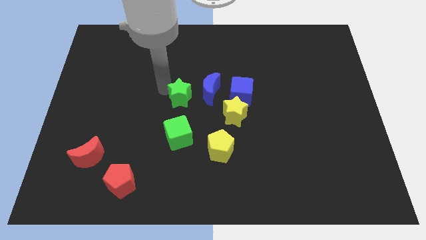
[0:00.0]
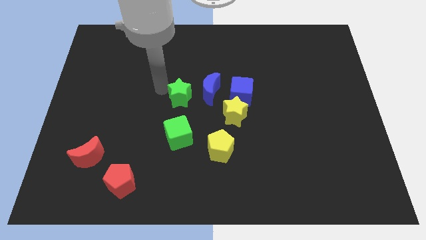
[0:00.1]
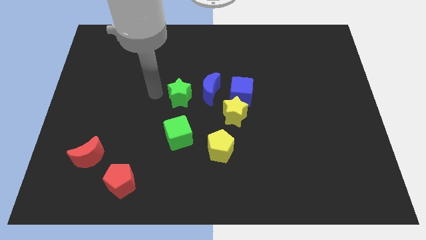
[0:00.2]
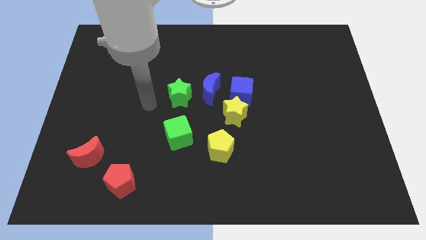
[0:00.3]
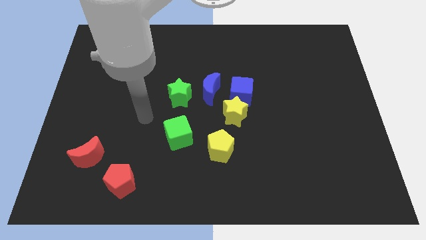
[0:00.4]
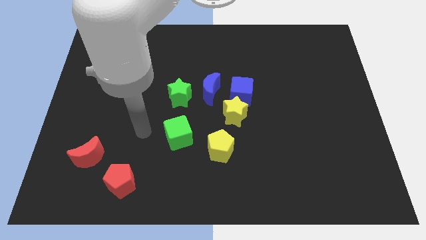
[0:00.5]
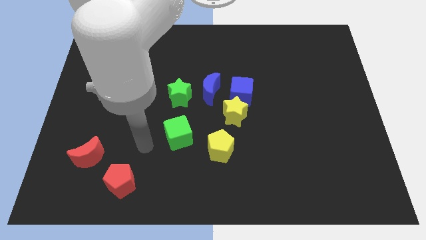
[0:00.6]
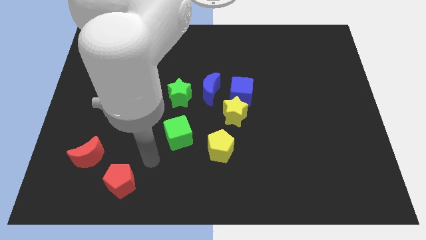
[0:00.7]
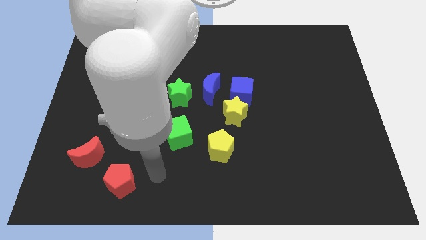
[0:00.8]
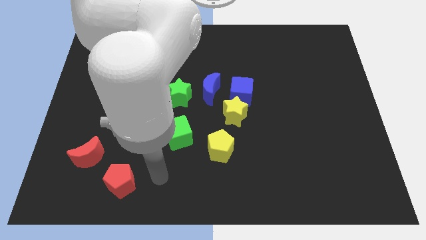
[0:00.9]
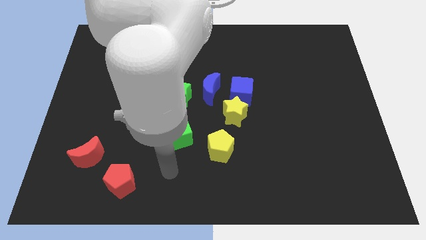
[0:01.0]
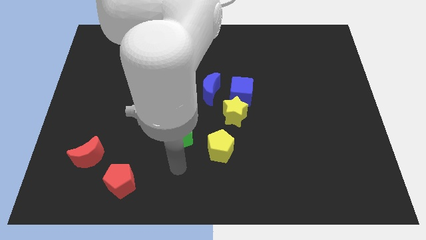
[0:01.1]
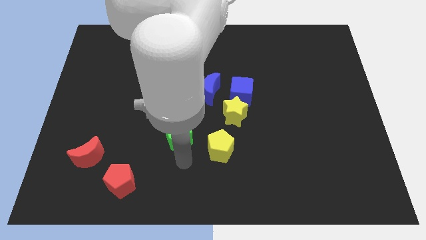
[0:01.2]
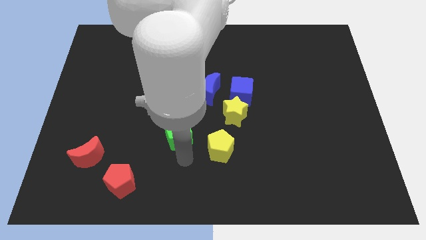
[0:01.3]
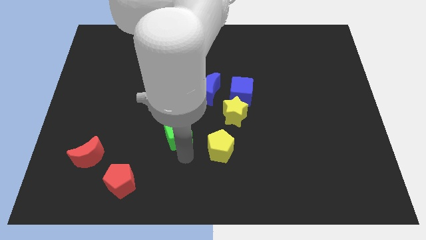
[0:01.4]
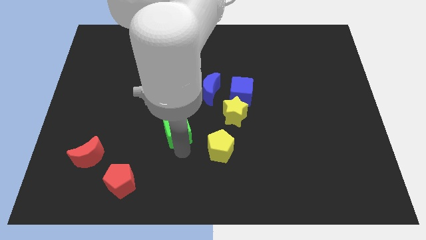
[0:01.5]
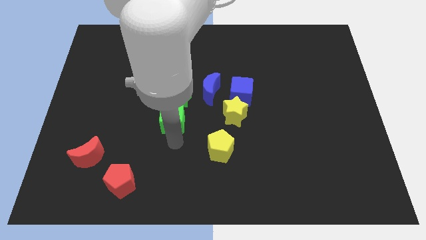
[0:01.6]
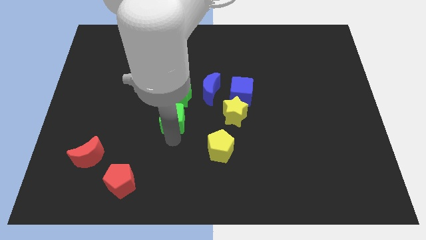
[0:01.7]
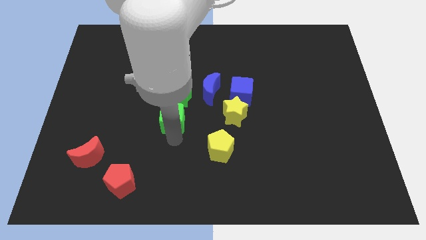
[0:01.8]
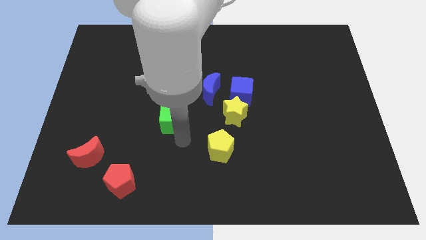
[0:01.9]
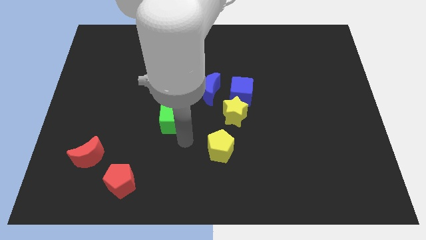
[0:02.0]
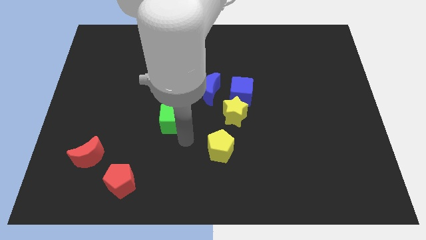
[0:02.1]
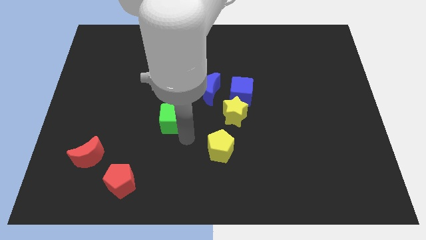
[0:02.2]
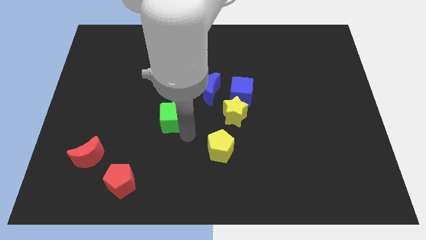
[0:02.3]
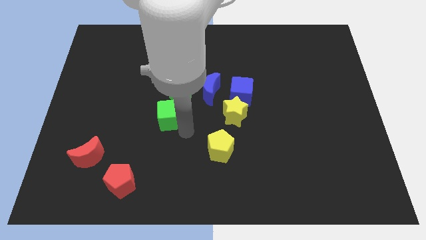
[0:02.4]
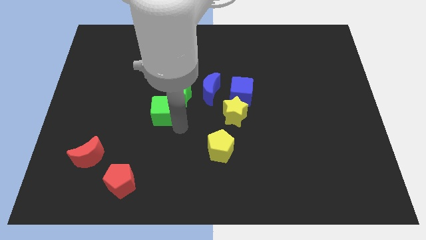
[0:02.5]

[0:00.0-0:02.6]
push the green cube towards the green star

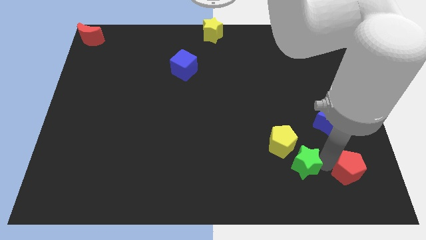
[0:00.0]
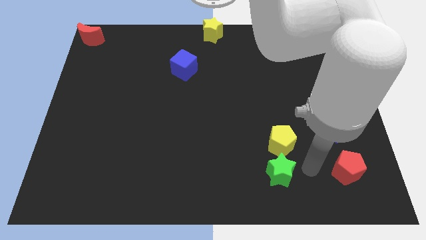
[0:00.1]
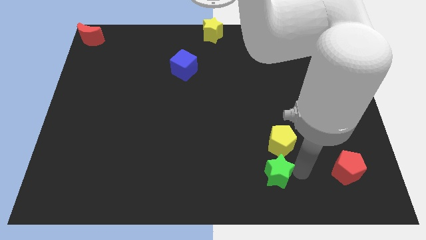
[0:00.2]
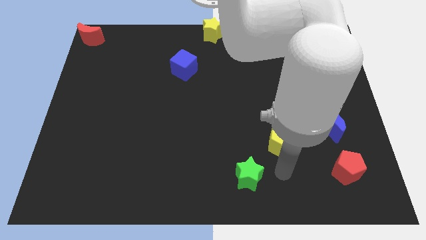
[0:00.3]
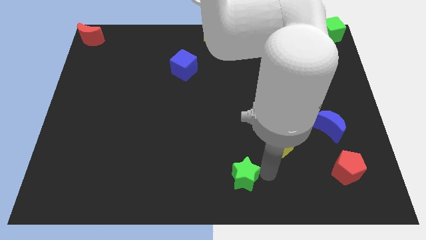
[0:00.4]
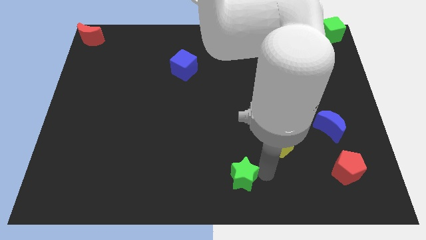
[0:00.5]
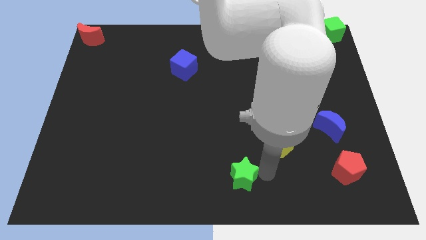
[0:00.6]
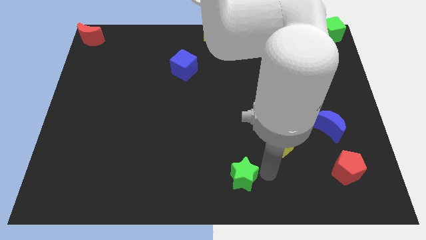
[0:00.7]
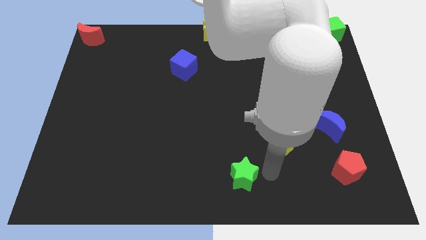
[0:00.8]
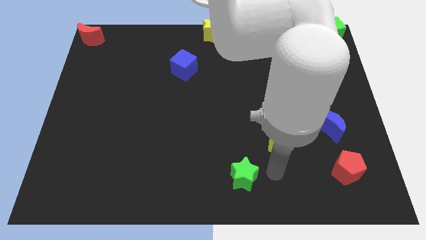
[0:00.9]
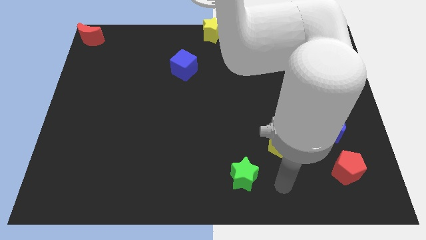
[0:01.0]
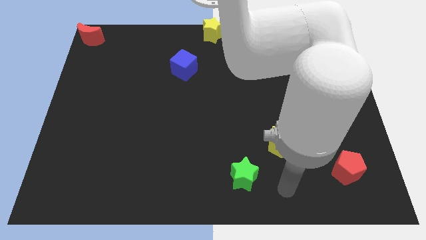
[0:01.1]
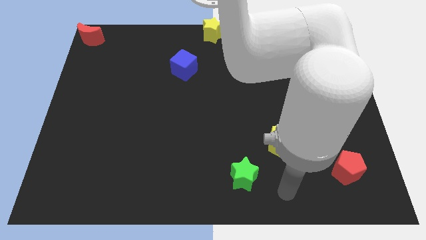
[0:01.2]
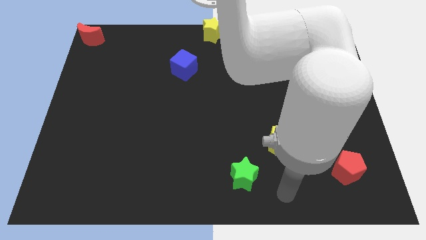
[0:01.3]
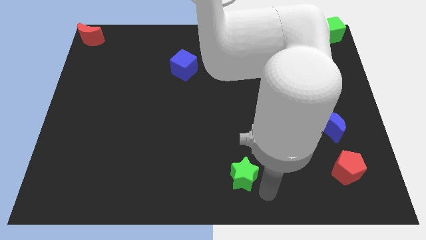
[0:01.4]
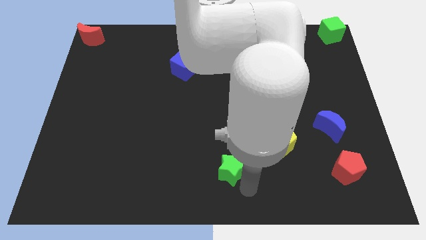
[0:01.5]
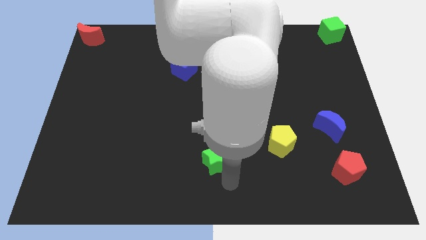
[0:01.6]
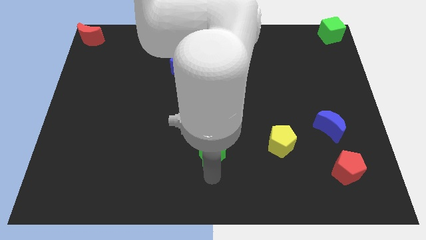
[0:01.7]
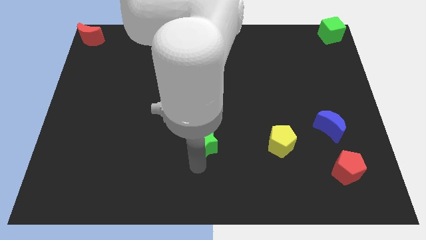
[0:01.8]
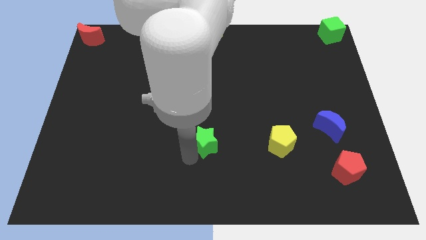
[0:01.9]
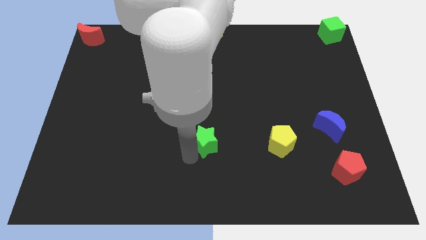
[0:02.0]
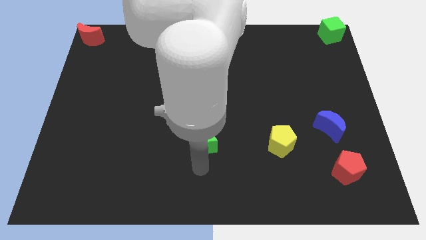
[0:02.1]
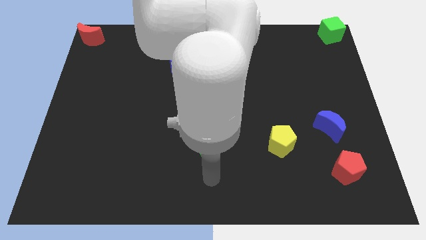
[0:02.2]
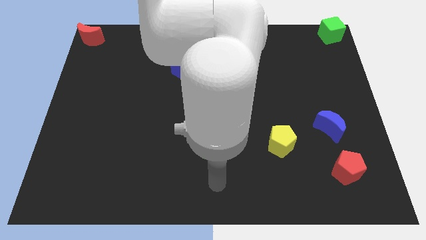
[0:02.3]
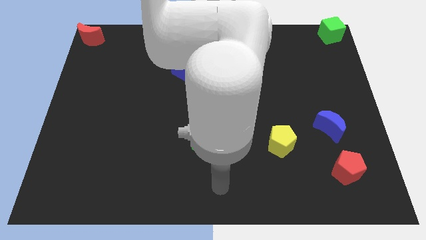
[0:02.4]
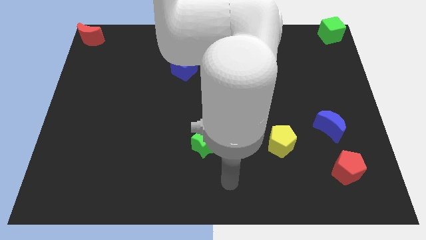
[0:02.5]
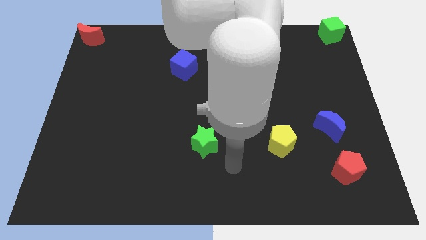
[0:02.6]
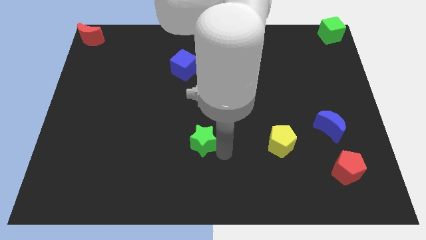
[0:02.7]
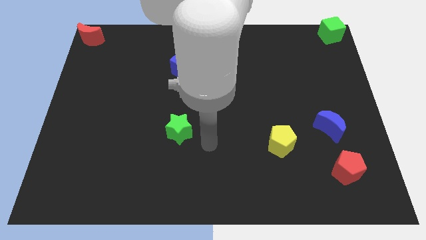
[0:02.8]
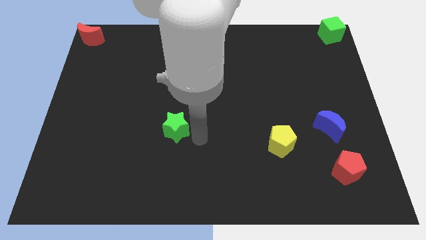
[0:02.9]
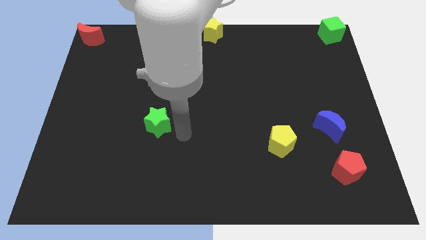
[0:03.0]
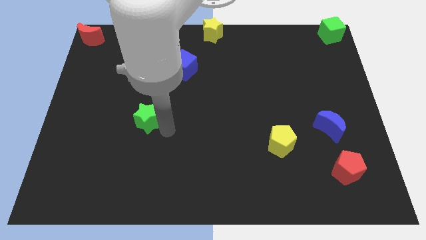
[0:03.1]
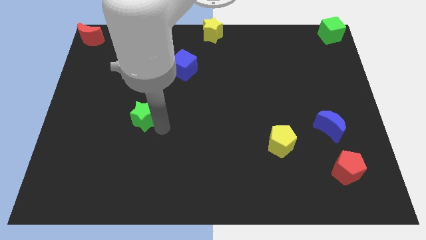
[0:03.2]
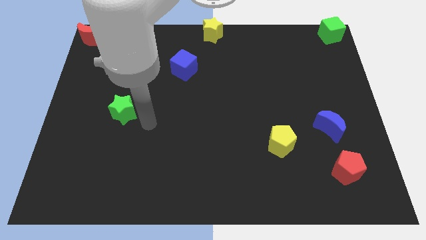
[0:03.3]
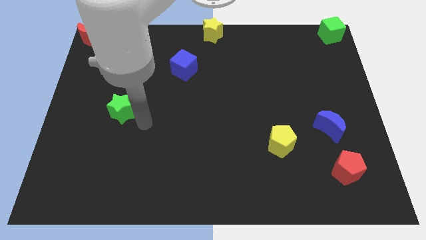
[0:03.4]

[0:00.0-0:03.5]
push the green star to the bottom left of the blue cube

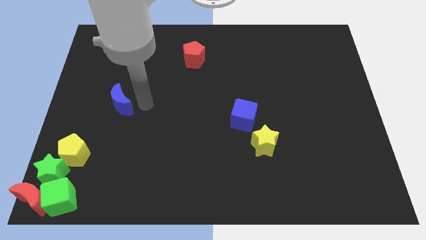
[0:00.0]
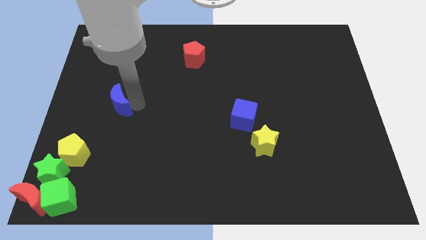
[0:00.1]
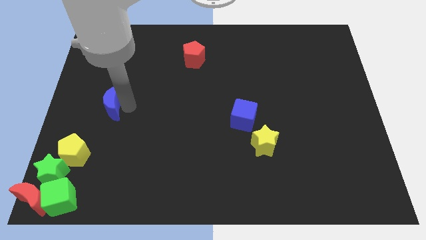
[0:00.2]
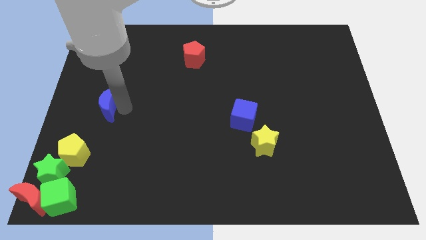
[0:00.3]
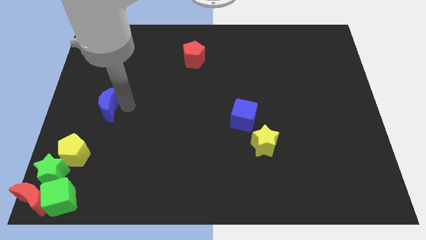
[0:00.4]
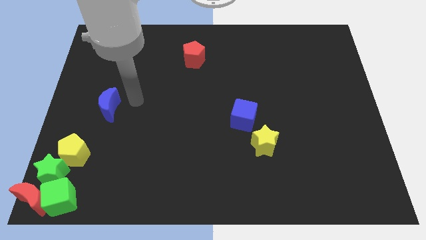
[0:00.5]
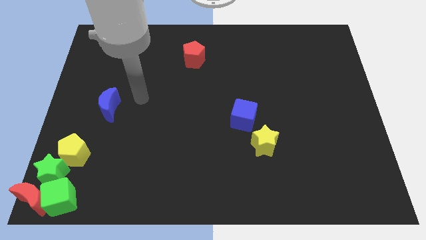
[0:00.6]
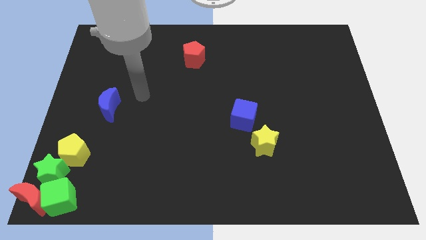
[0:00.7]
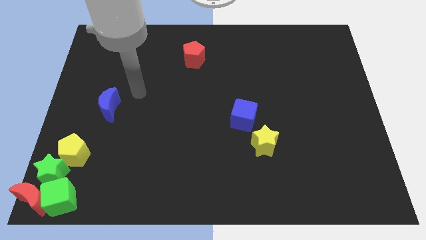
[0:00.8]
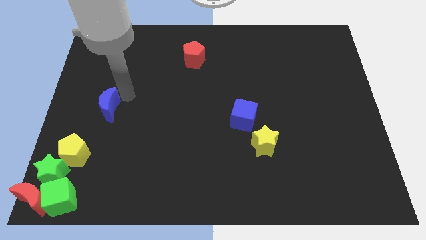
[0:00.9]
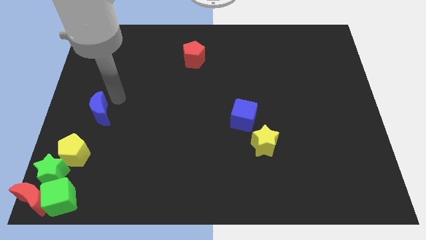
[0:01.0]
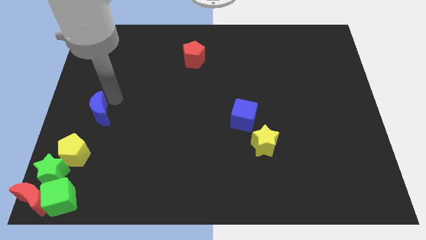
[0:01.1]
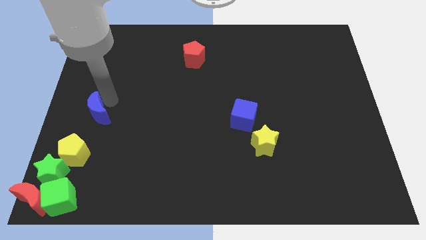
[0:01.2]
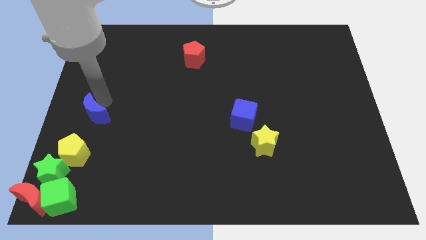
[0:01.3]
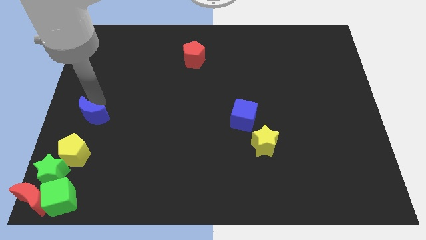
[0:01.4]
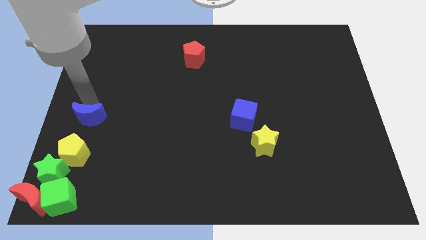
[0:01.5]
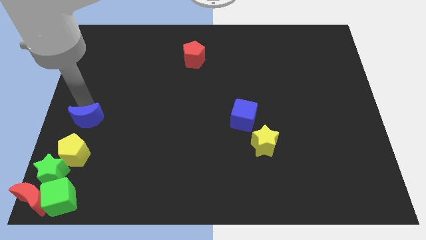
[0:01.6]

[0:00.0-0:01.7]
place the blue moon above the yellow pentagon

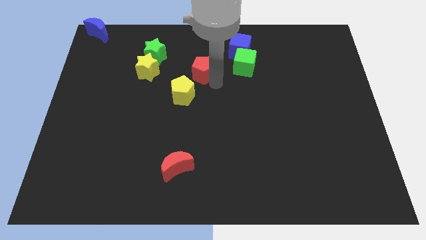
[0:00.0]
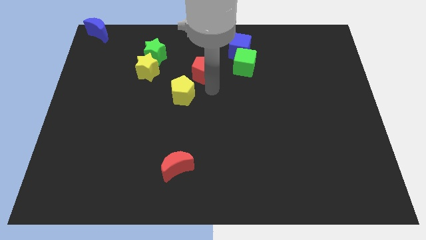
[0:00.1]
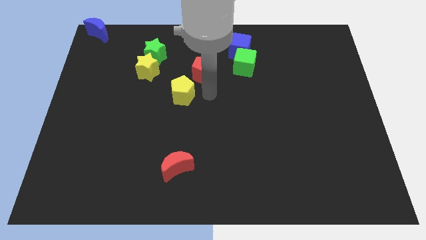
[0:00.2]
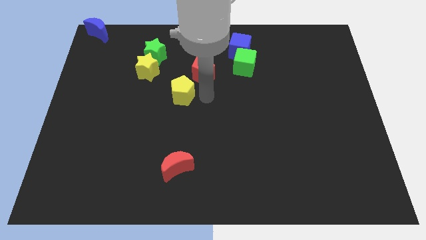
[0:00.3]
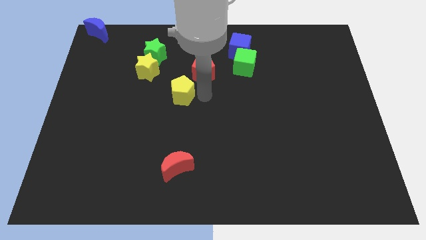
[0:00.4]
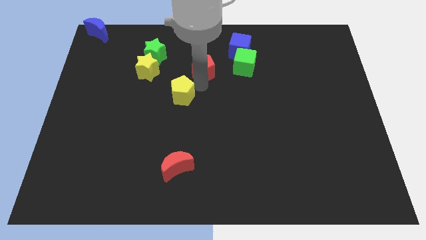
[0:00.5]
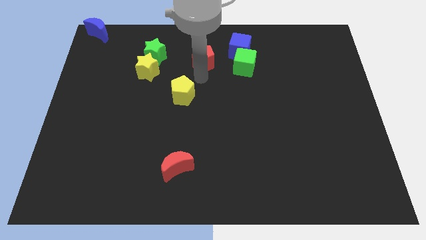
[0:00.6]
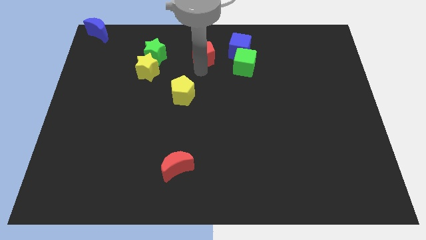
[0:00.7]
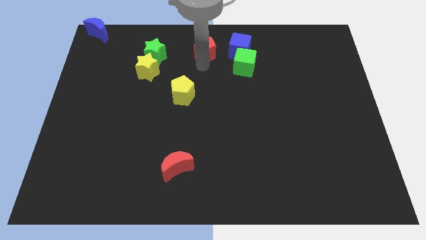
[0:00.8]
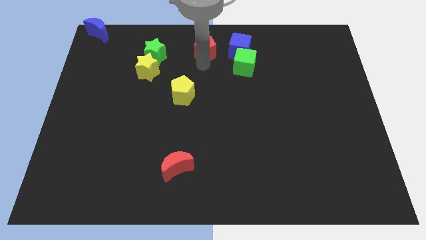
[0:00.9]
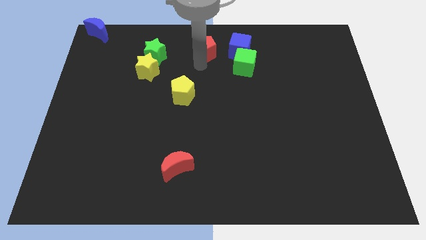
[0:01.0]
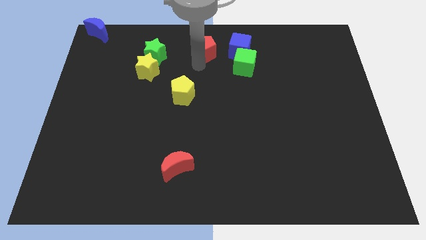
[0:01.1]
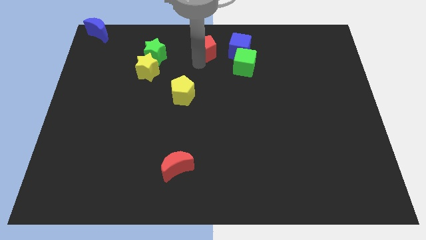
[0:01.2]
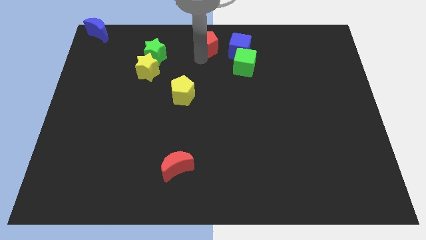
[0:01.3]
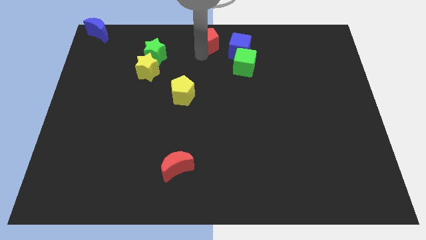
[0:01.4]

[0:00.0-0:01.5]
place the red pentagon to the top center of the board
